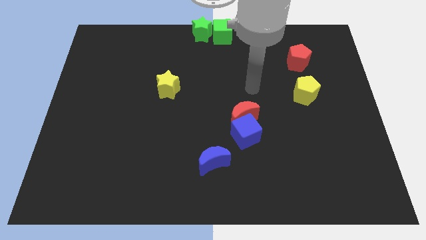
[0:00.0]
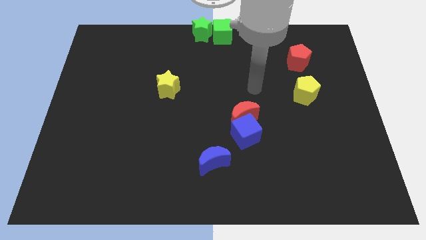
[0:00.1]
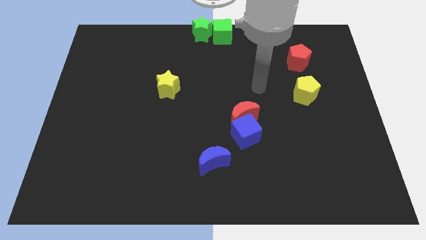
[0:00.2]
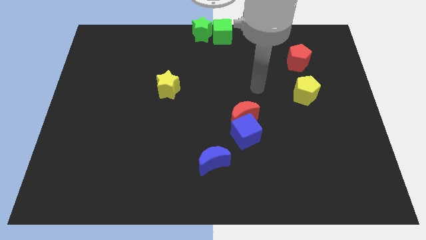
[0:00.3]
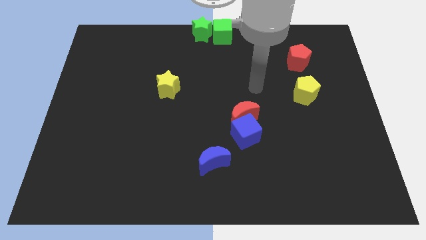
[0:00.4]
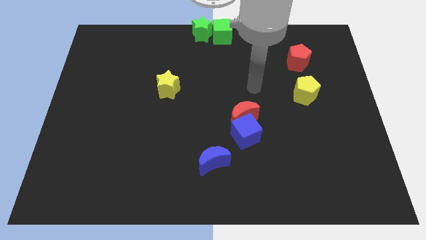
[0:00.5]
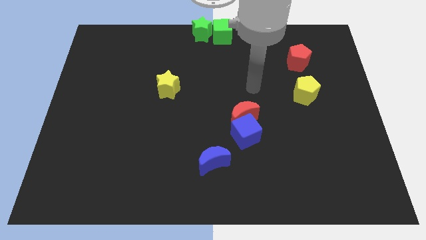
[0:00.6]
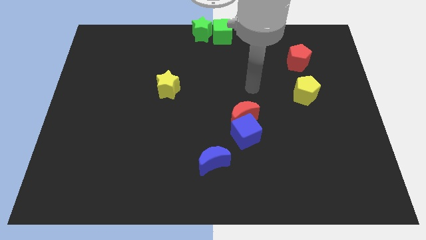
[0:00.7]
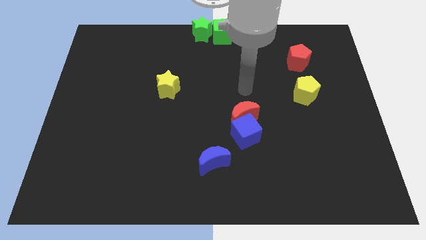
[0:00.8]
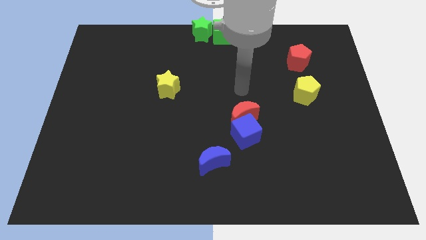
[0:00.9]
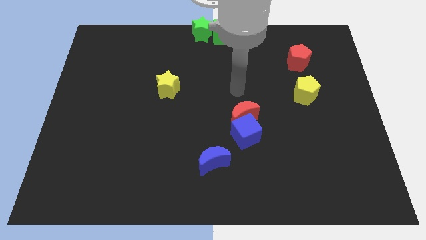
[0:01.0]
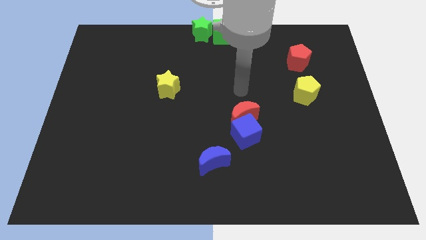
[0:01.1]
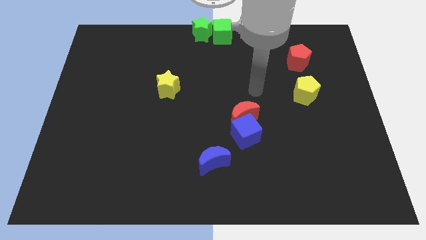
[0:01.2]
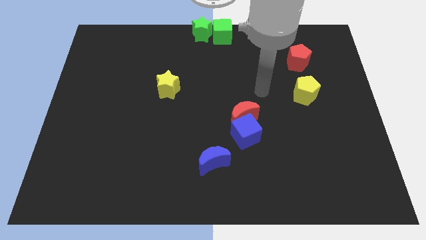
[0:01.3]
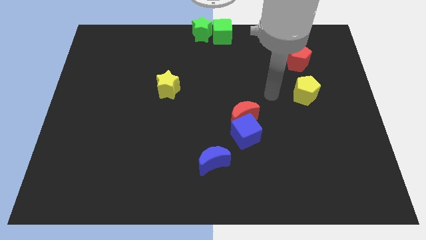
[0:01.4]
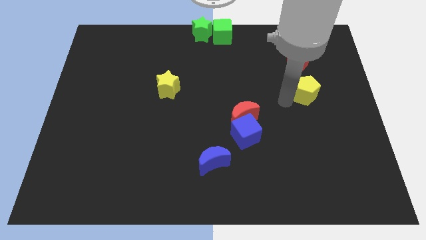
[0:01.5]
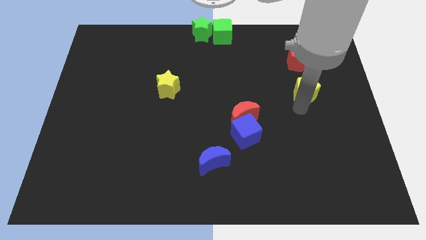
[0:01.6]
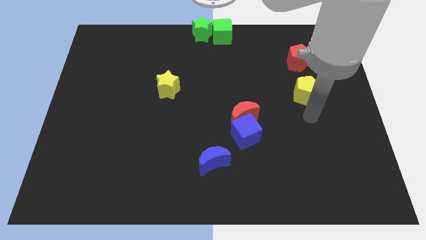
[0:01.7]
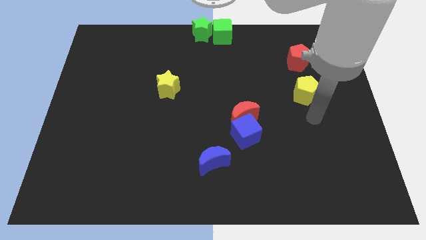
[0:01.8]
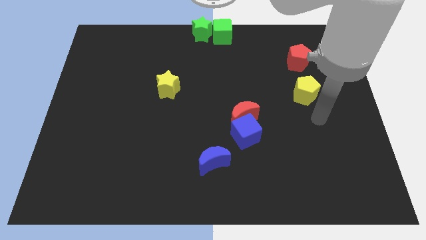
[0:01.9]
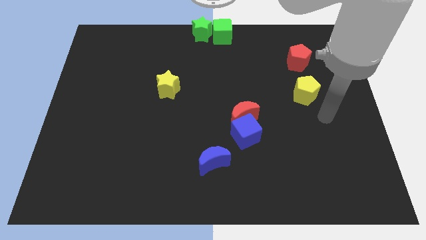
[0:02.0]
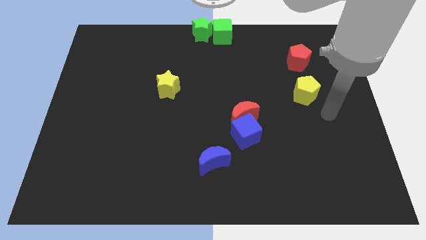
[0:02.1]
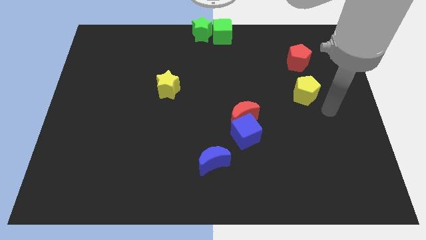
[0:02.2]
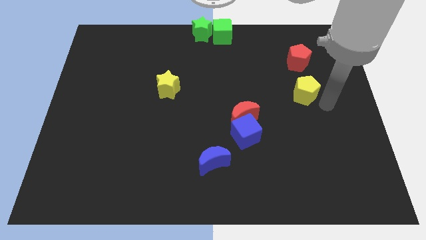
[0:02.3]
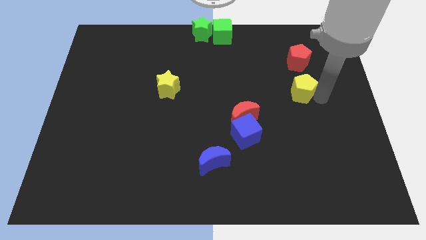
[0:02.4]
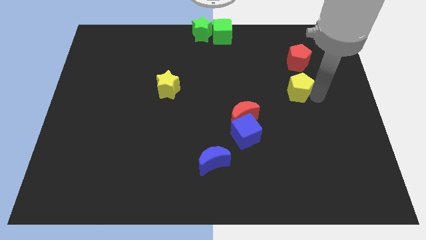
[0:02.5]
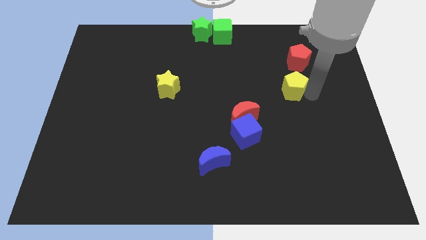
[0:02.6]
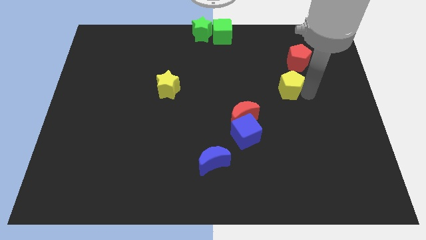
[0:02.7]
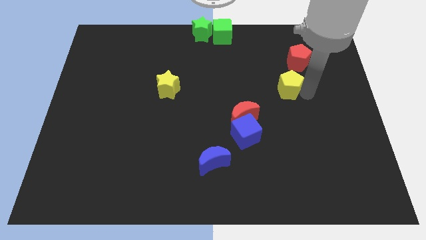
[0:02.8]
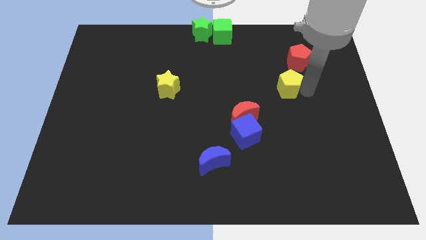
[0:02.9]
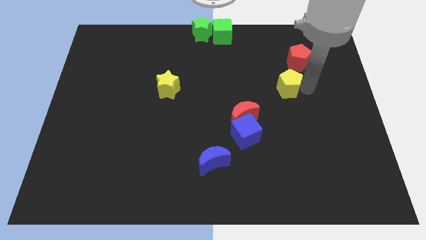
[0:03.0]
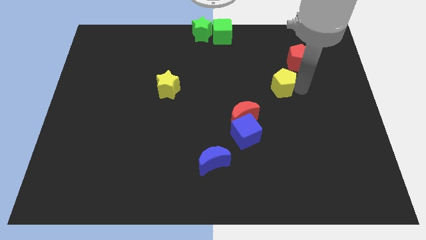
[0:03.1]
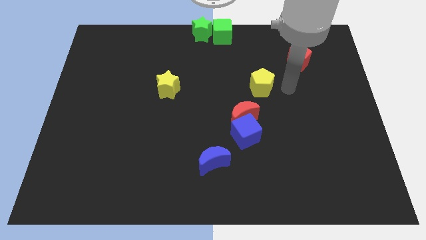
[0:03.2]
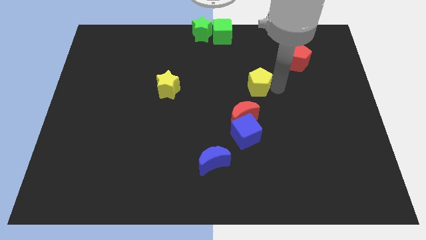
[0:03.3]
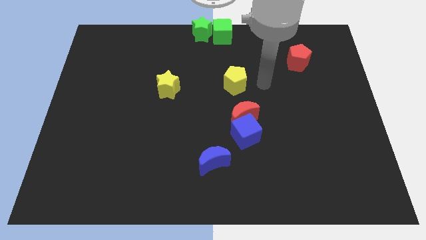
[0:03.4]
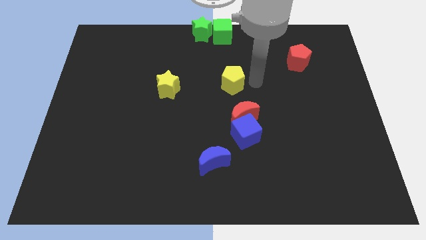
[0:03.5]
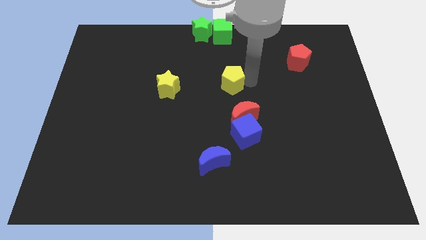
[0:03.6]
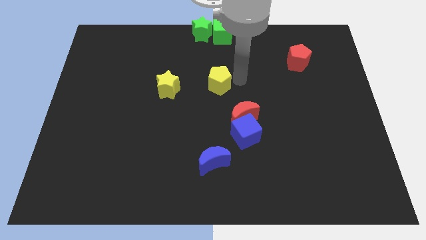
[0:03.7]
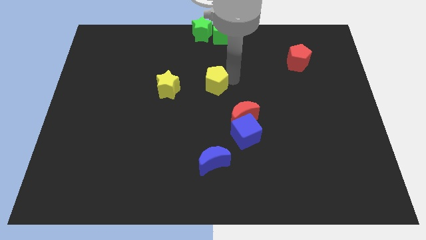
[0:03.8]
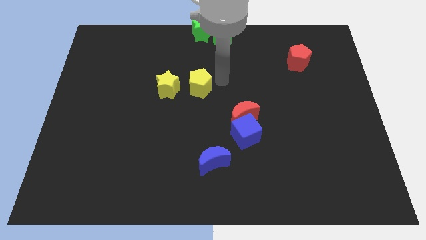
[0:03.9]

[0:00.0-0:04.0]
move the yellow pentagon to the center of the board

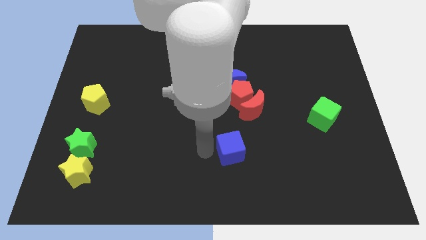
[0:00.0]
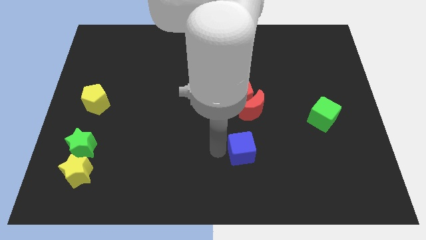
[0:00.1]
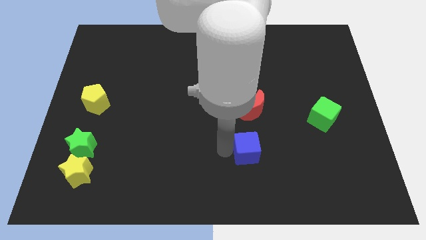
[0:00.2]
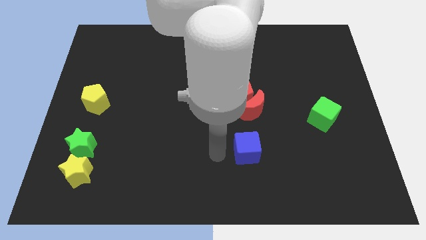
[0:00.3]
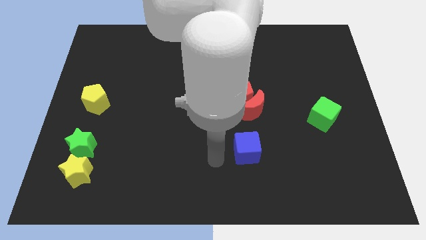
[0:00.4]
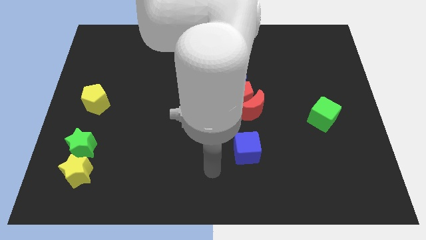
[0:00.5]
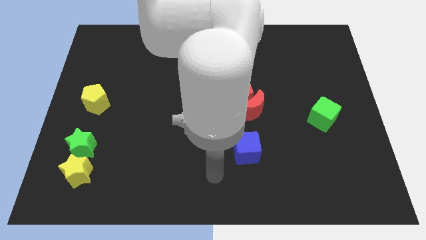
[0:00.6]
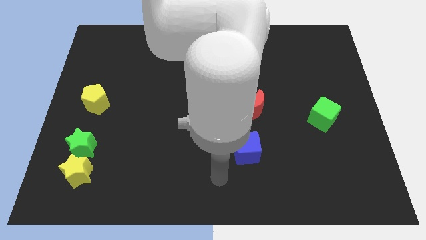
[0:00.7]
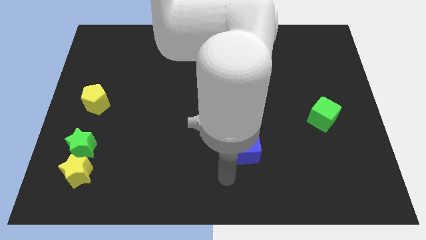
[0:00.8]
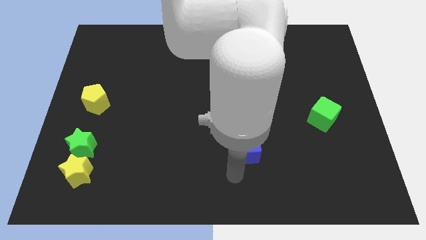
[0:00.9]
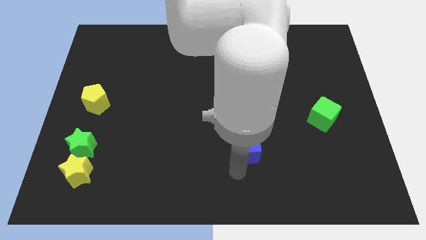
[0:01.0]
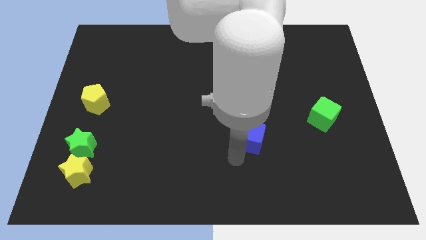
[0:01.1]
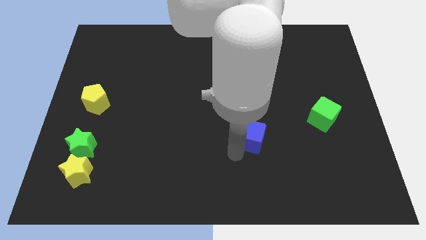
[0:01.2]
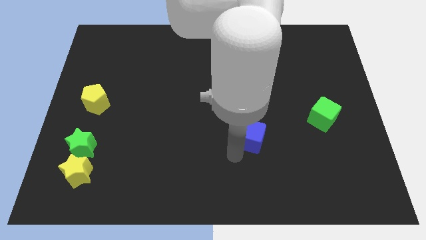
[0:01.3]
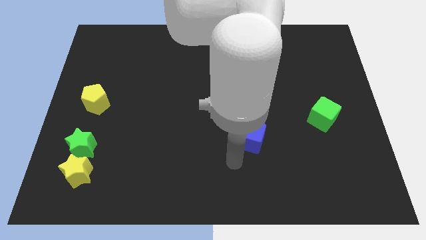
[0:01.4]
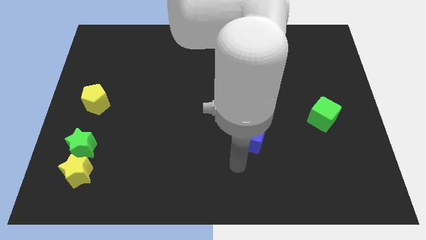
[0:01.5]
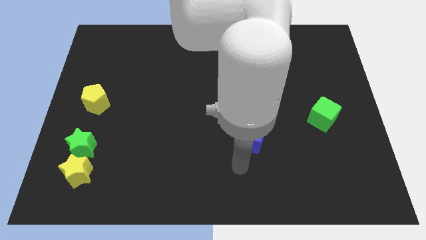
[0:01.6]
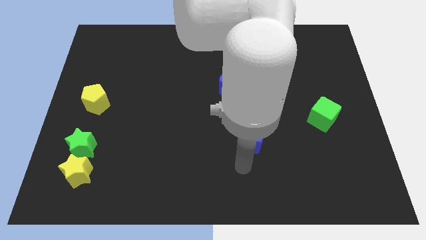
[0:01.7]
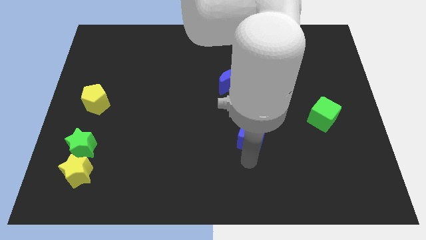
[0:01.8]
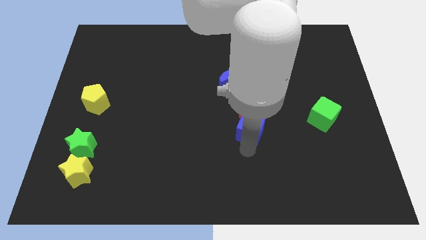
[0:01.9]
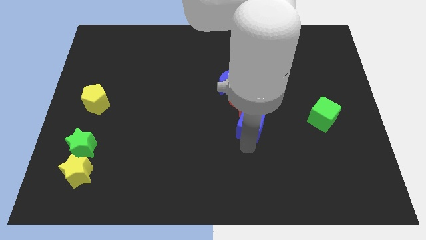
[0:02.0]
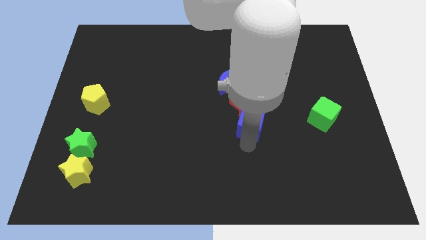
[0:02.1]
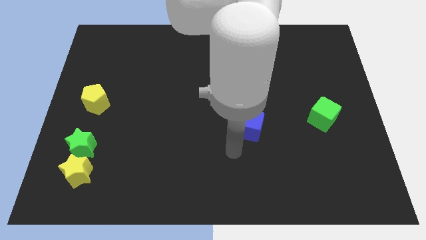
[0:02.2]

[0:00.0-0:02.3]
move the blue cube to the bottom of the red crescent

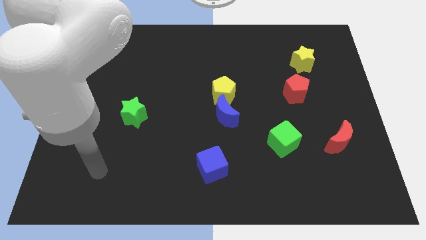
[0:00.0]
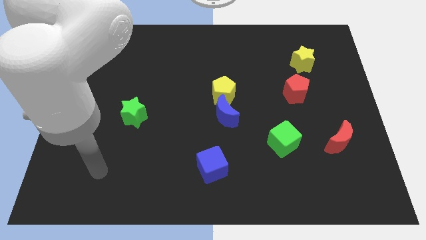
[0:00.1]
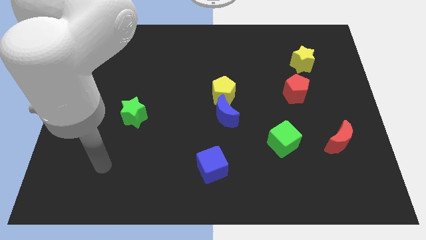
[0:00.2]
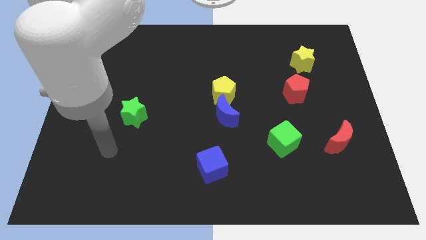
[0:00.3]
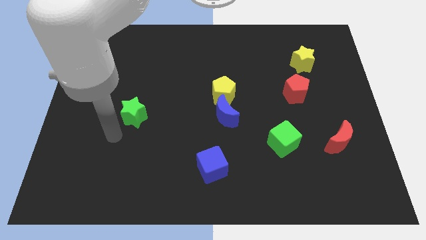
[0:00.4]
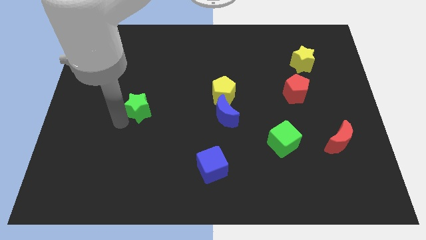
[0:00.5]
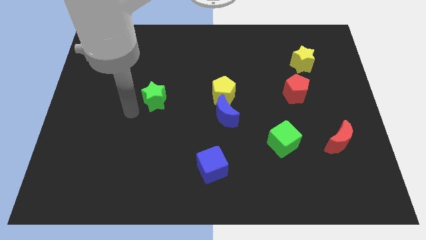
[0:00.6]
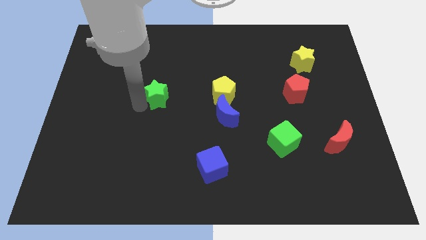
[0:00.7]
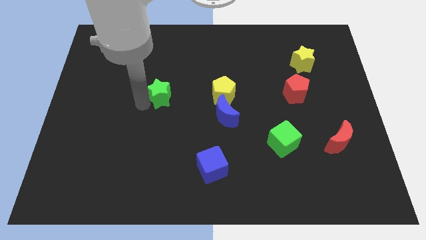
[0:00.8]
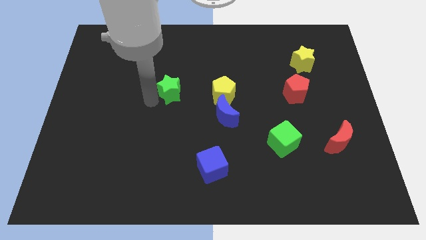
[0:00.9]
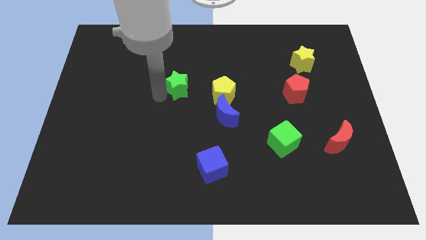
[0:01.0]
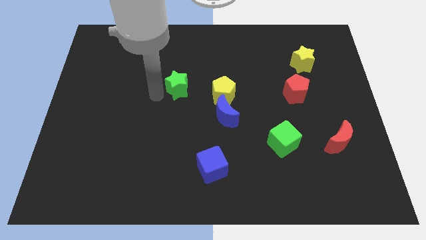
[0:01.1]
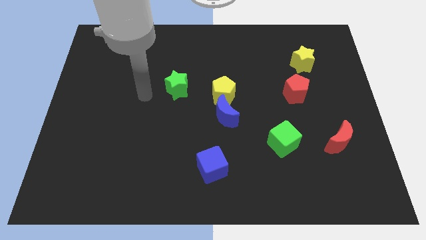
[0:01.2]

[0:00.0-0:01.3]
move the green star diagonally at the top left of the blue moon

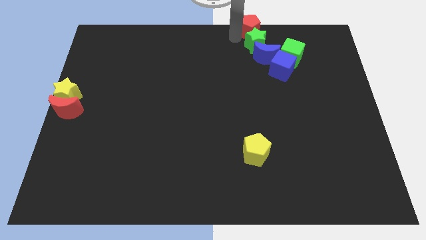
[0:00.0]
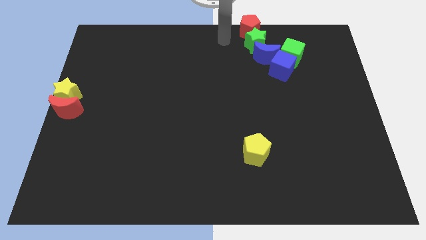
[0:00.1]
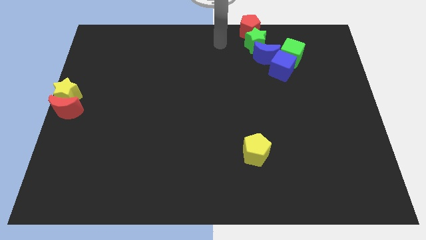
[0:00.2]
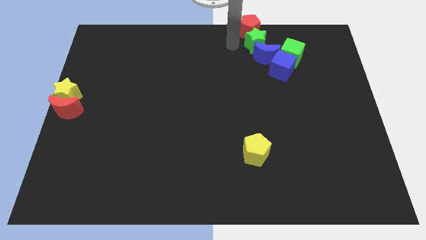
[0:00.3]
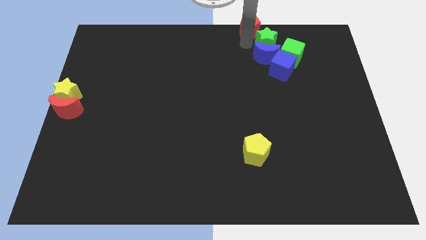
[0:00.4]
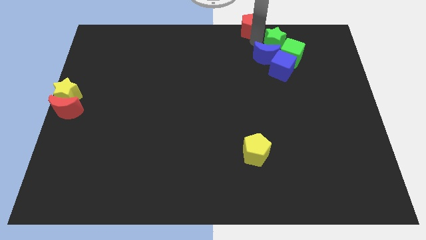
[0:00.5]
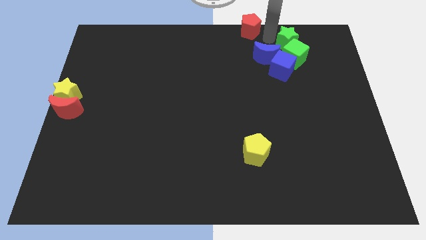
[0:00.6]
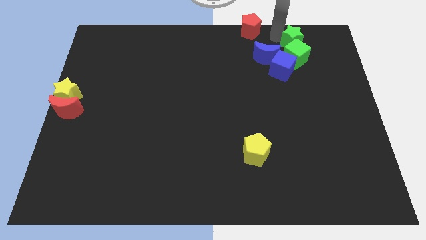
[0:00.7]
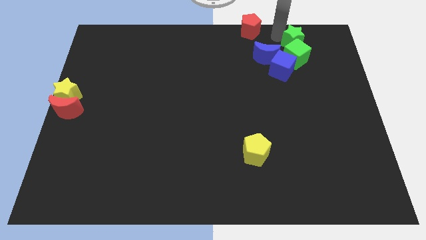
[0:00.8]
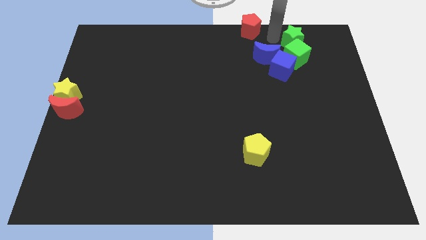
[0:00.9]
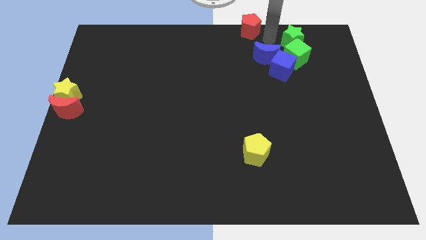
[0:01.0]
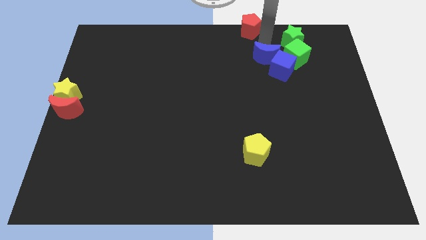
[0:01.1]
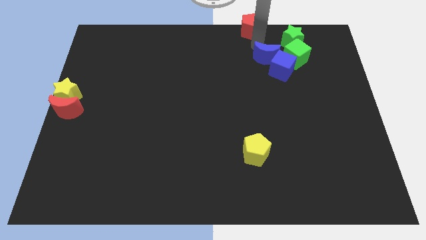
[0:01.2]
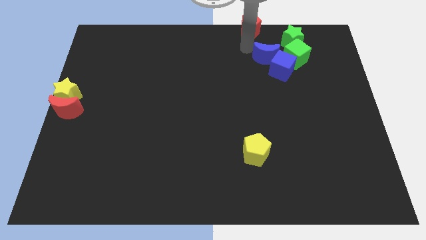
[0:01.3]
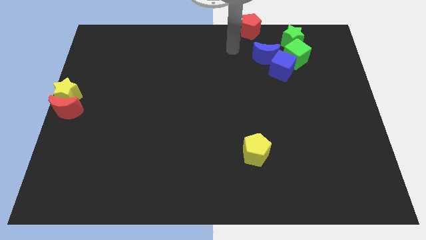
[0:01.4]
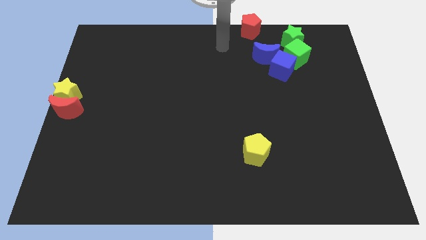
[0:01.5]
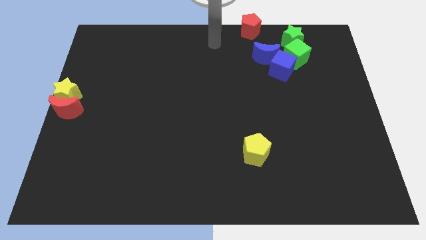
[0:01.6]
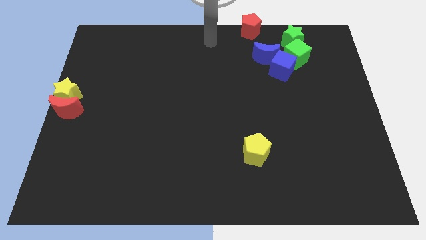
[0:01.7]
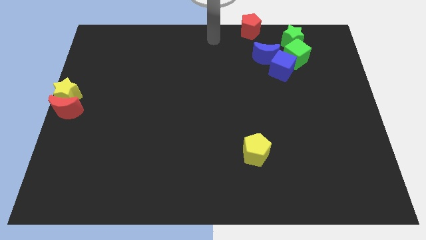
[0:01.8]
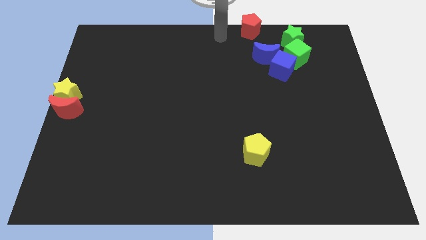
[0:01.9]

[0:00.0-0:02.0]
put the green star above the green cube
